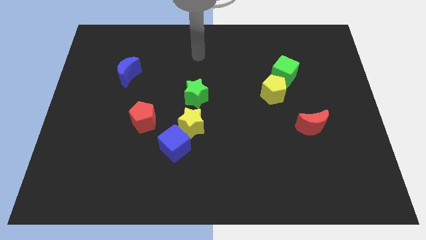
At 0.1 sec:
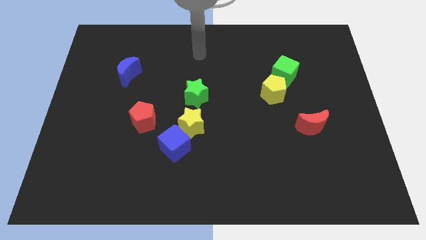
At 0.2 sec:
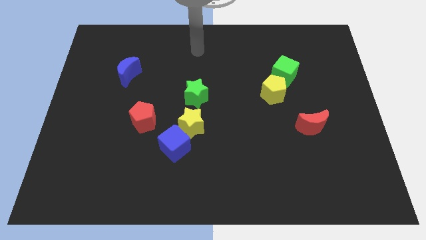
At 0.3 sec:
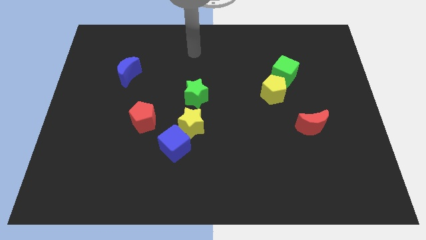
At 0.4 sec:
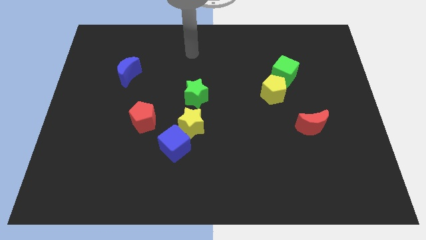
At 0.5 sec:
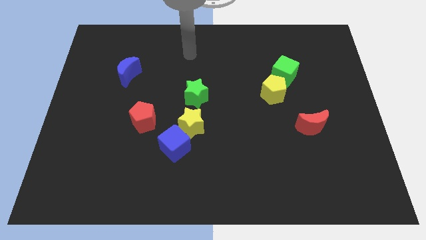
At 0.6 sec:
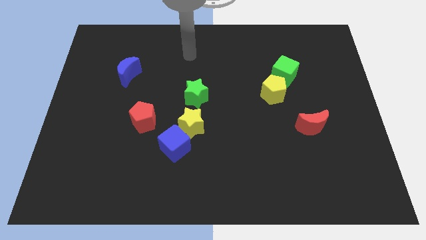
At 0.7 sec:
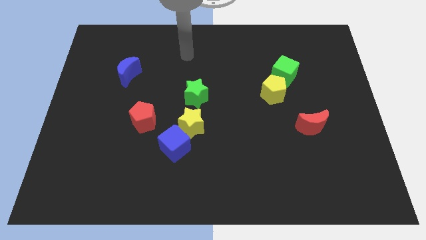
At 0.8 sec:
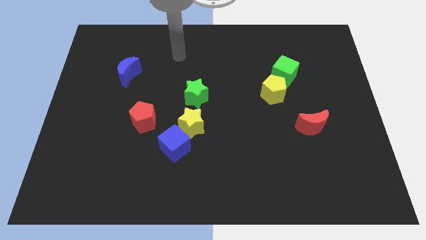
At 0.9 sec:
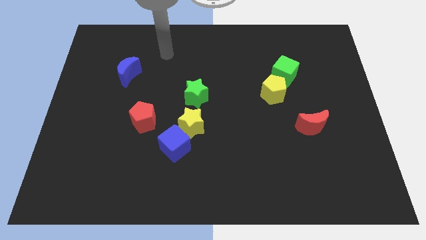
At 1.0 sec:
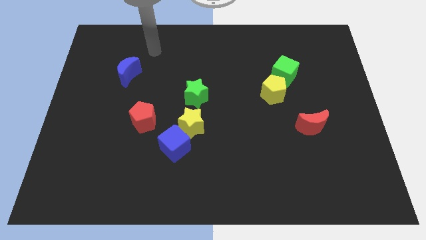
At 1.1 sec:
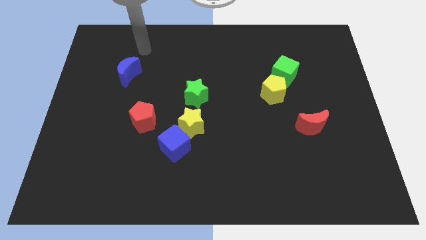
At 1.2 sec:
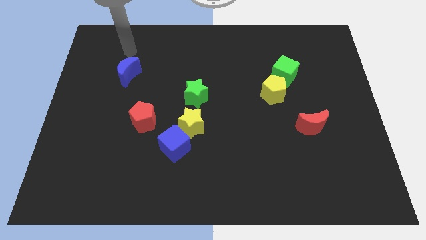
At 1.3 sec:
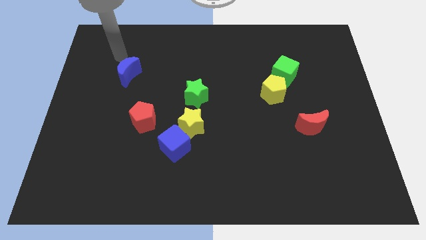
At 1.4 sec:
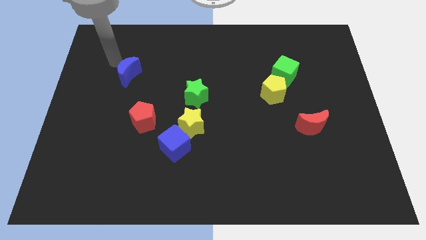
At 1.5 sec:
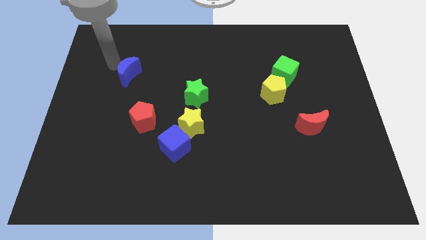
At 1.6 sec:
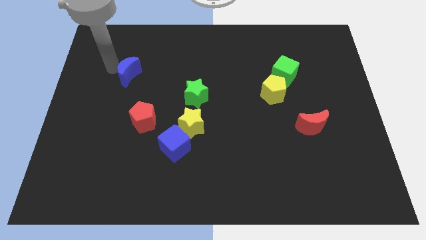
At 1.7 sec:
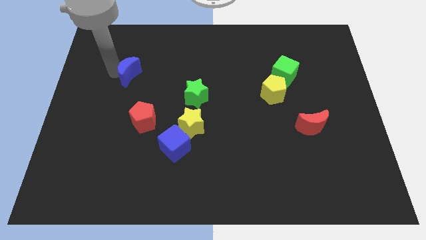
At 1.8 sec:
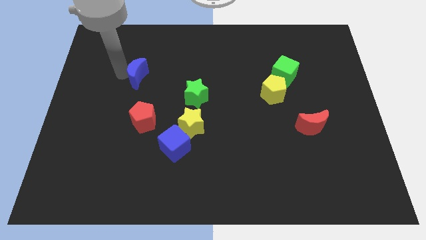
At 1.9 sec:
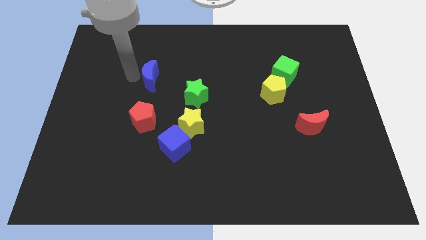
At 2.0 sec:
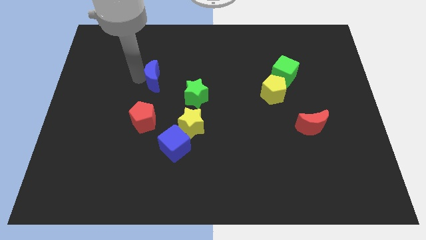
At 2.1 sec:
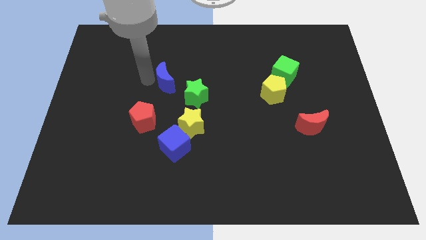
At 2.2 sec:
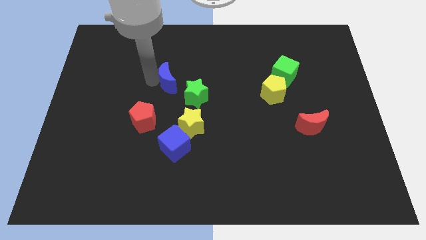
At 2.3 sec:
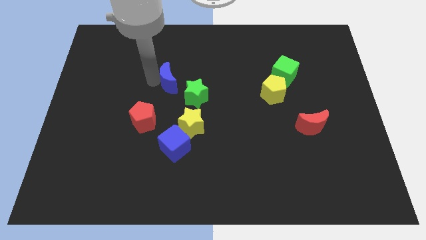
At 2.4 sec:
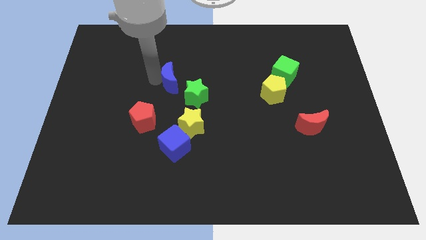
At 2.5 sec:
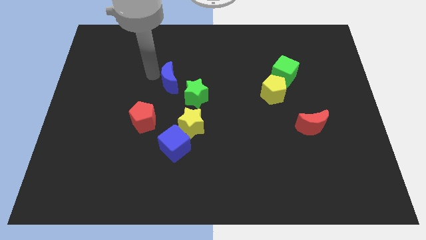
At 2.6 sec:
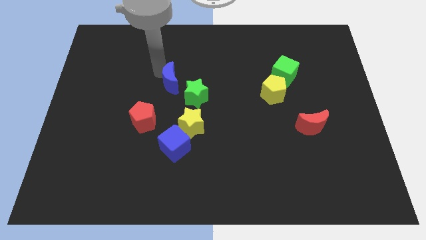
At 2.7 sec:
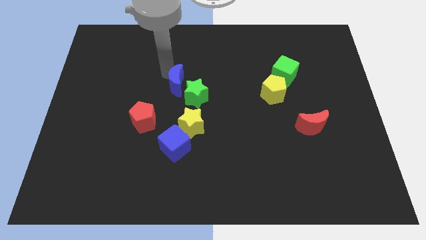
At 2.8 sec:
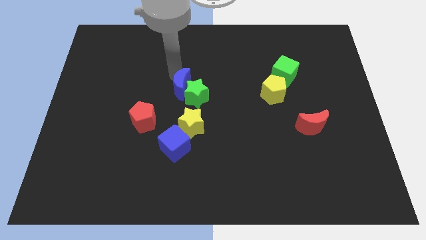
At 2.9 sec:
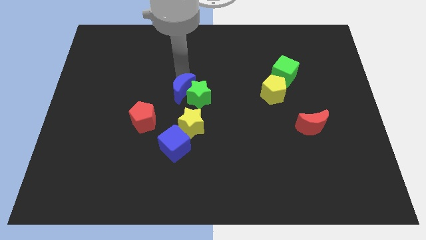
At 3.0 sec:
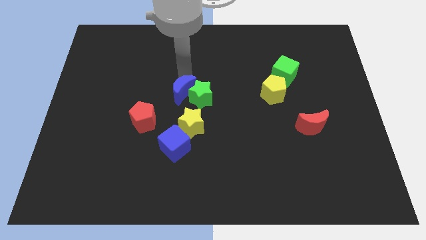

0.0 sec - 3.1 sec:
put the blue moon to the green star

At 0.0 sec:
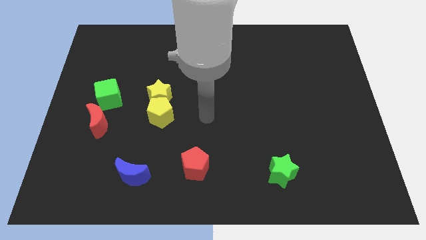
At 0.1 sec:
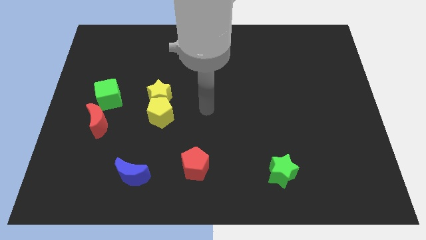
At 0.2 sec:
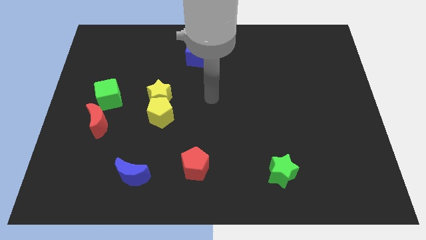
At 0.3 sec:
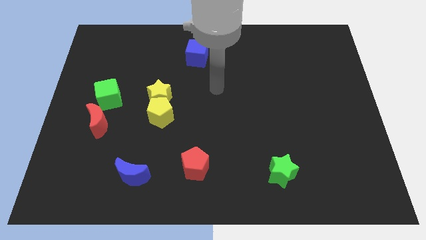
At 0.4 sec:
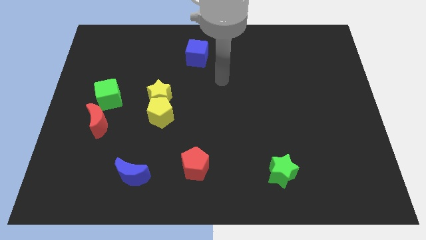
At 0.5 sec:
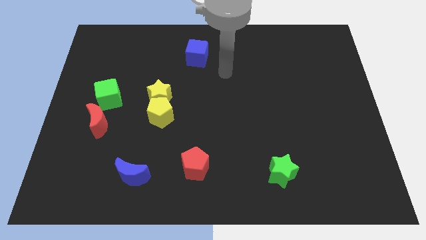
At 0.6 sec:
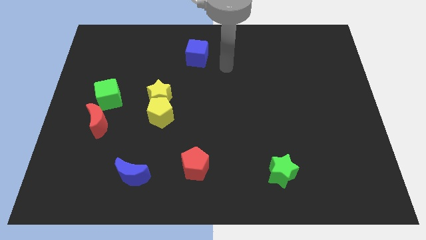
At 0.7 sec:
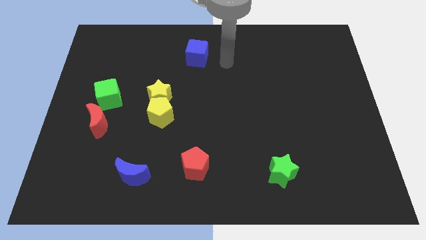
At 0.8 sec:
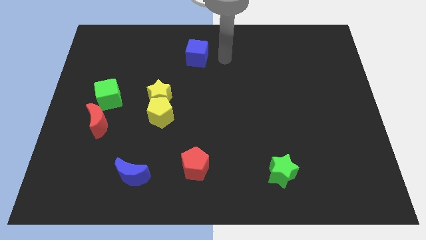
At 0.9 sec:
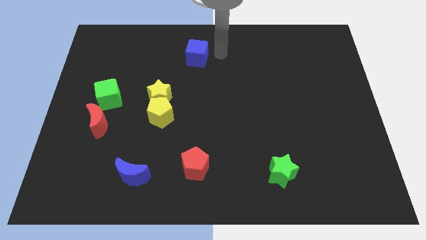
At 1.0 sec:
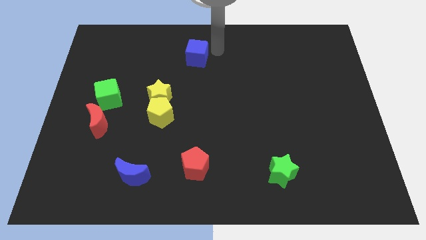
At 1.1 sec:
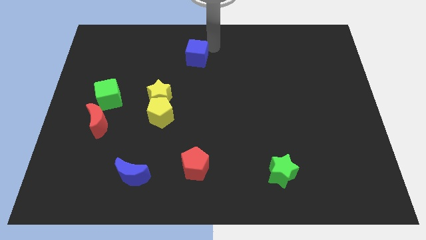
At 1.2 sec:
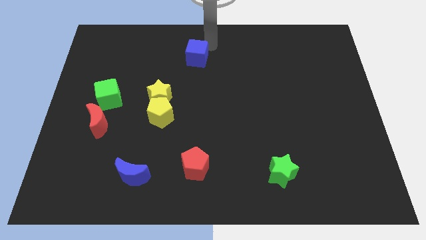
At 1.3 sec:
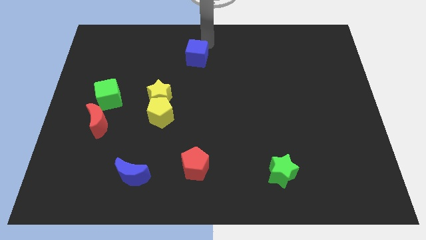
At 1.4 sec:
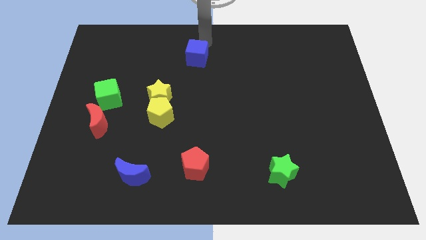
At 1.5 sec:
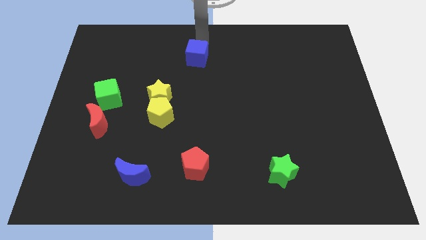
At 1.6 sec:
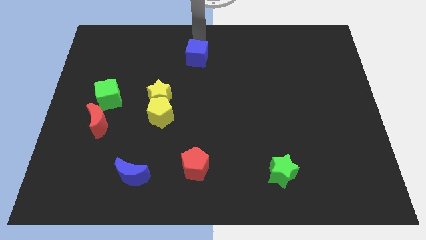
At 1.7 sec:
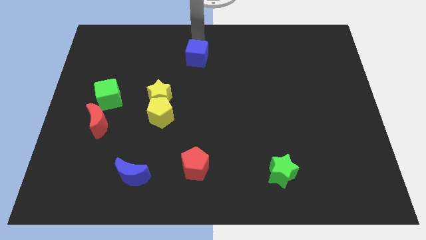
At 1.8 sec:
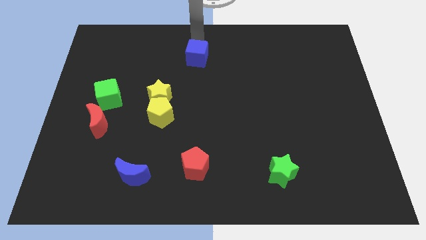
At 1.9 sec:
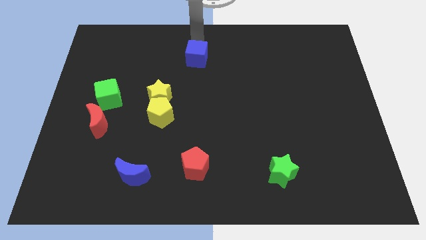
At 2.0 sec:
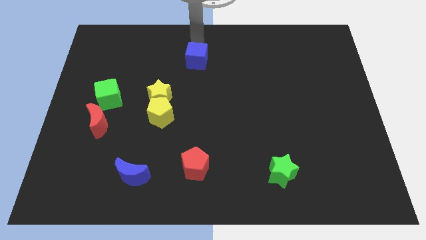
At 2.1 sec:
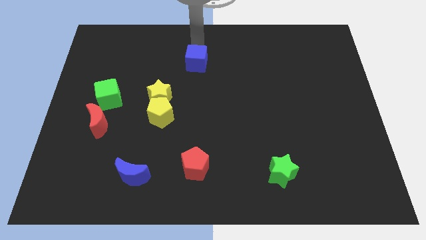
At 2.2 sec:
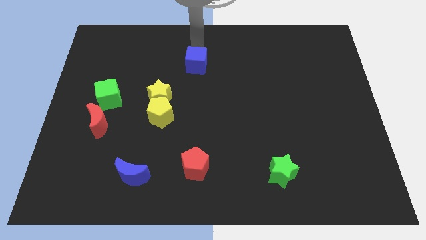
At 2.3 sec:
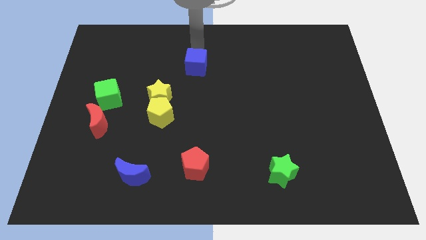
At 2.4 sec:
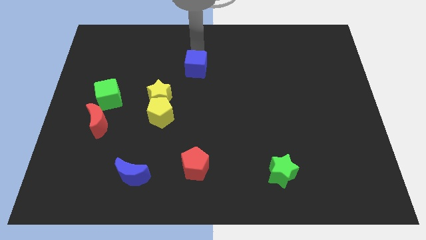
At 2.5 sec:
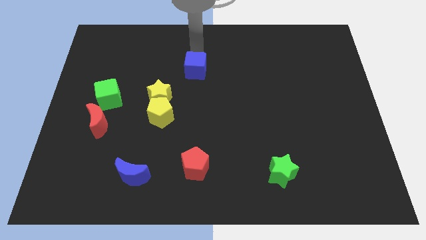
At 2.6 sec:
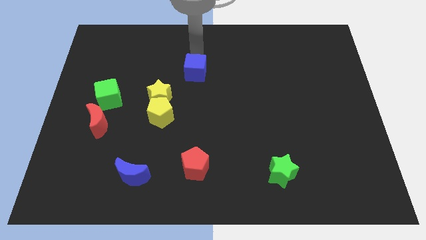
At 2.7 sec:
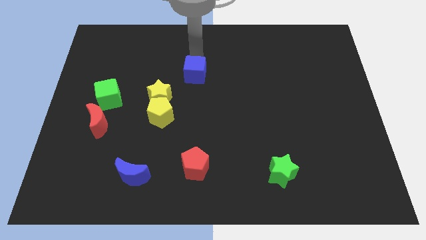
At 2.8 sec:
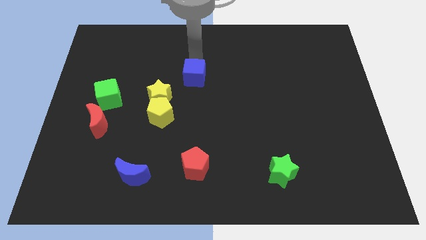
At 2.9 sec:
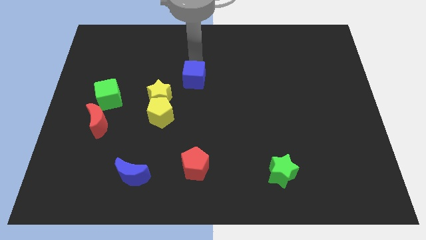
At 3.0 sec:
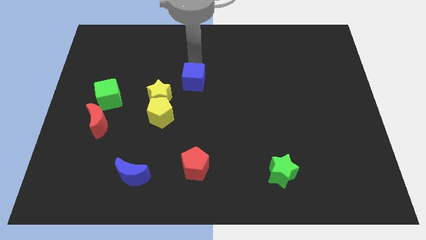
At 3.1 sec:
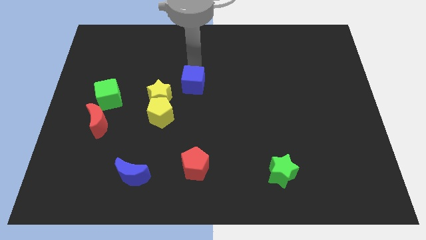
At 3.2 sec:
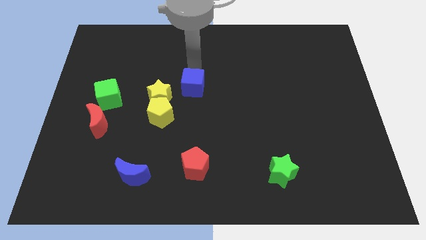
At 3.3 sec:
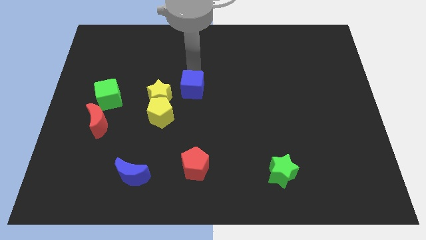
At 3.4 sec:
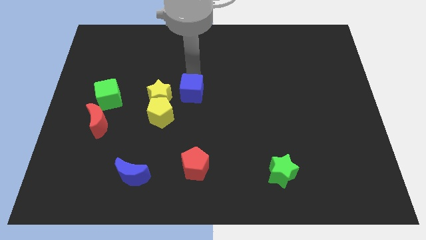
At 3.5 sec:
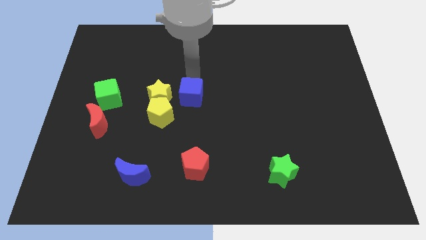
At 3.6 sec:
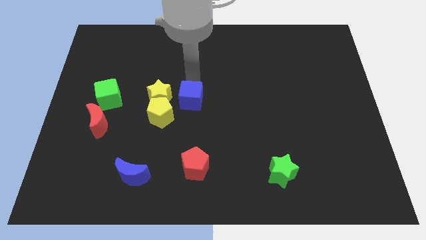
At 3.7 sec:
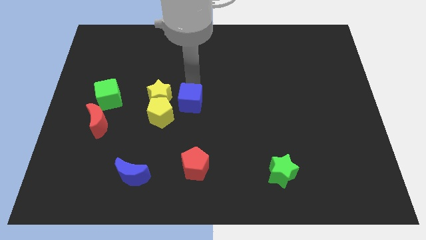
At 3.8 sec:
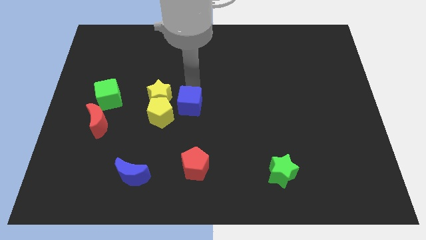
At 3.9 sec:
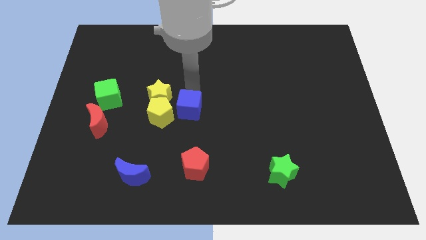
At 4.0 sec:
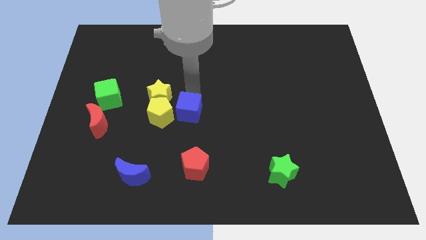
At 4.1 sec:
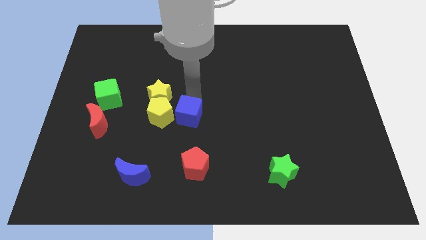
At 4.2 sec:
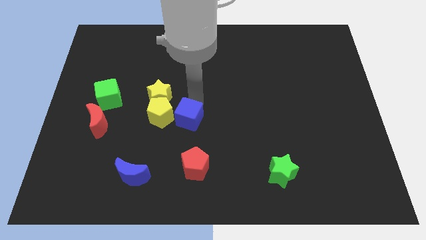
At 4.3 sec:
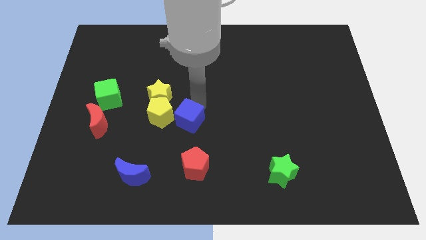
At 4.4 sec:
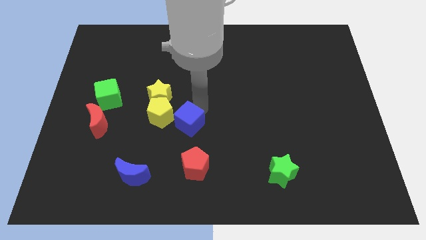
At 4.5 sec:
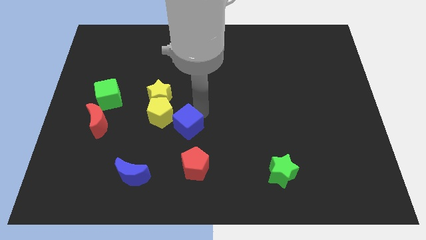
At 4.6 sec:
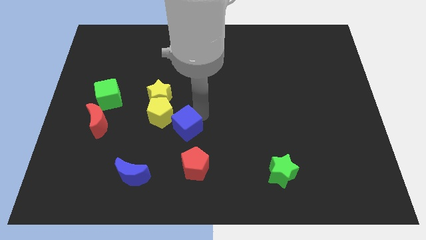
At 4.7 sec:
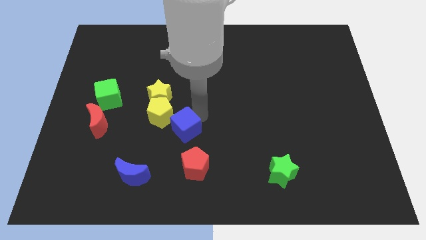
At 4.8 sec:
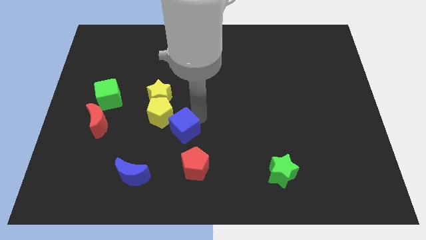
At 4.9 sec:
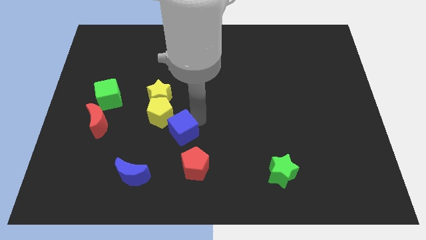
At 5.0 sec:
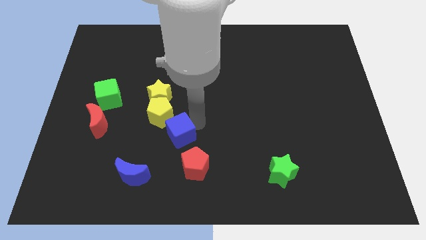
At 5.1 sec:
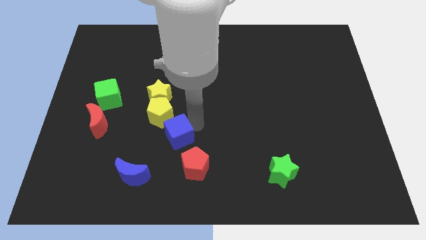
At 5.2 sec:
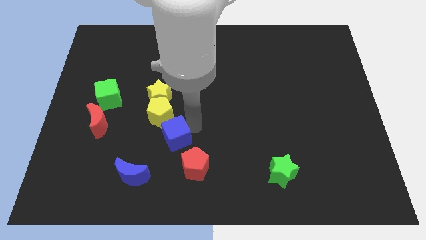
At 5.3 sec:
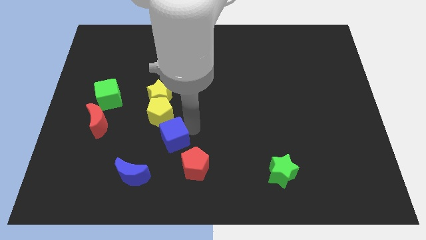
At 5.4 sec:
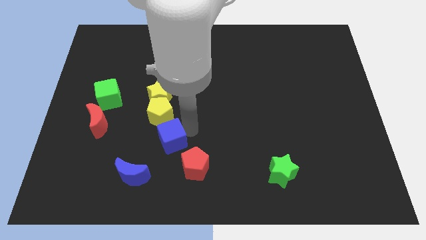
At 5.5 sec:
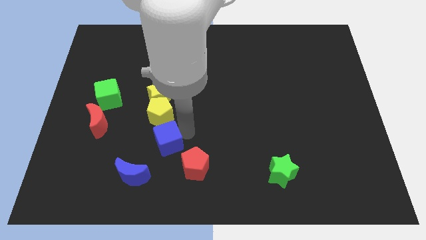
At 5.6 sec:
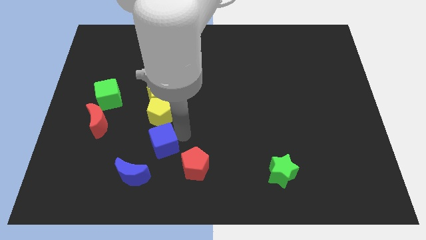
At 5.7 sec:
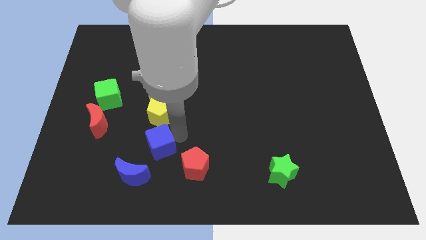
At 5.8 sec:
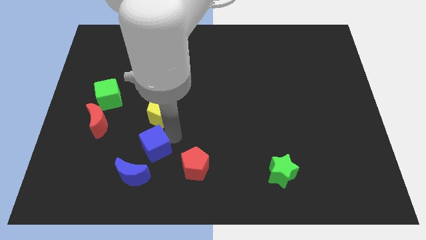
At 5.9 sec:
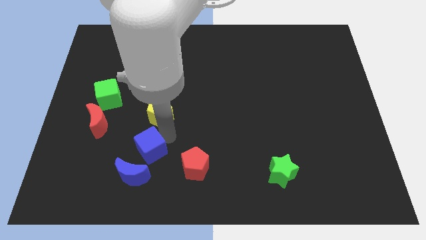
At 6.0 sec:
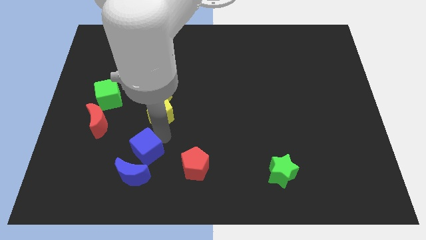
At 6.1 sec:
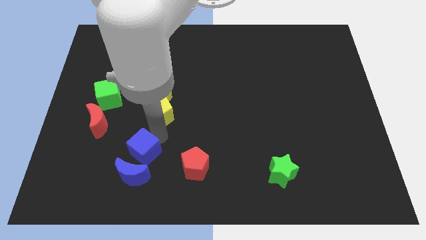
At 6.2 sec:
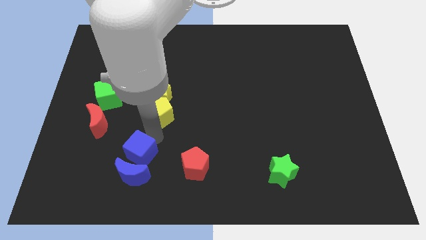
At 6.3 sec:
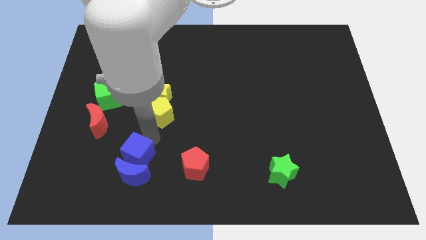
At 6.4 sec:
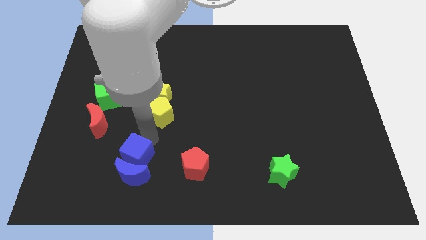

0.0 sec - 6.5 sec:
put the blue cube close to the blue moon
